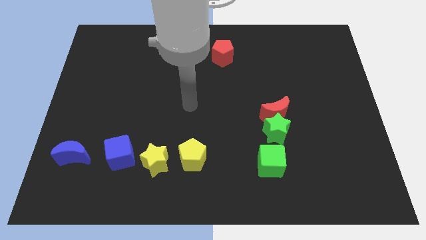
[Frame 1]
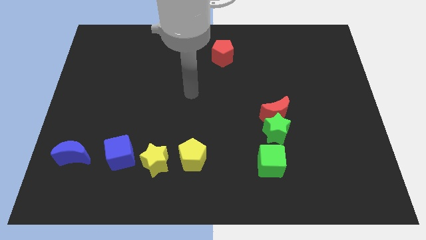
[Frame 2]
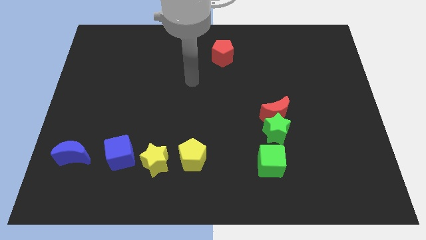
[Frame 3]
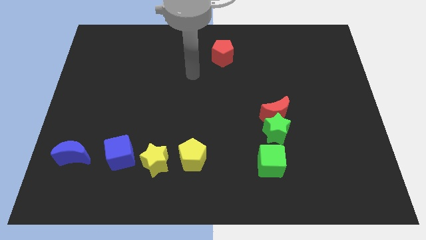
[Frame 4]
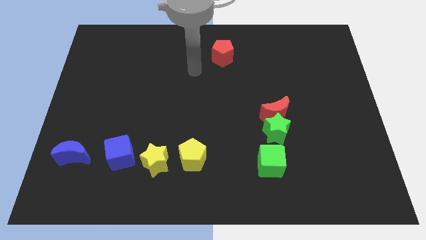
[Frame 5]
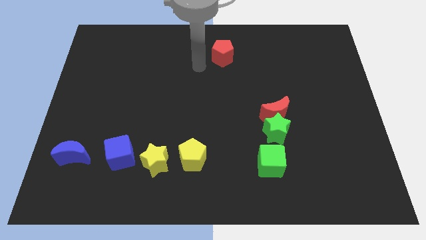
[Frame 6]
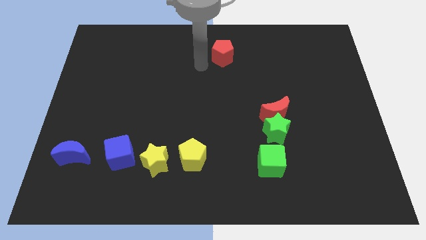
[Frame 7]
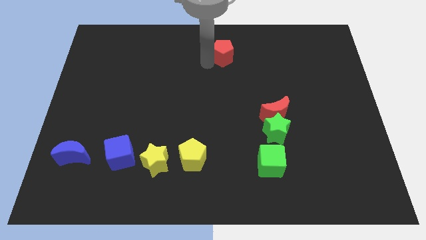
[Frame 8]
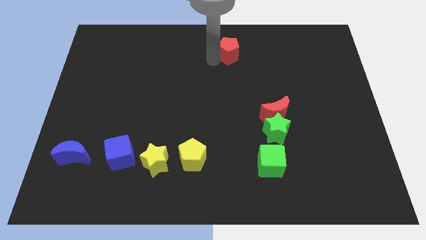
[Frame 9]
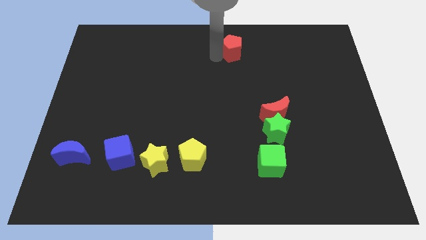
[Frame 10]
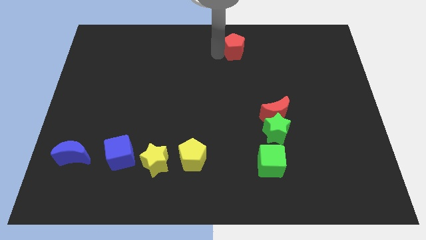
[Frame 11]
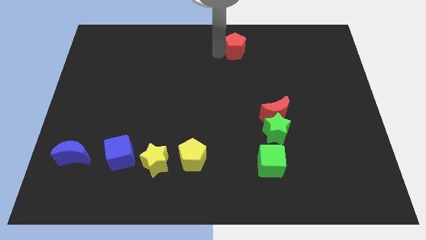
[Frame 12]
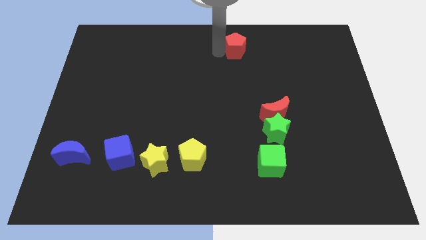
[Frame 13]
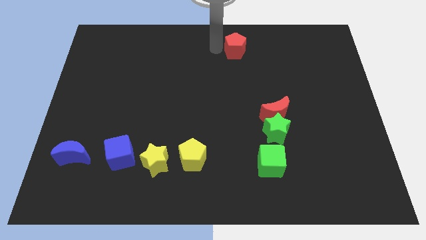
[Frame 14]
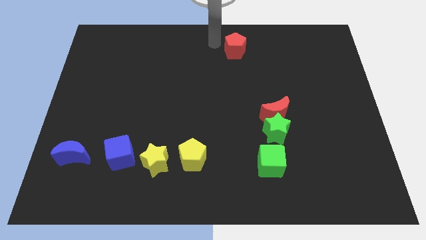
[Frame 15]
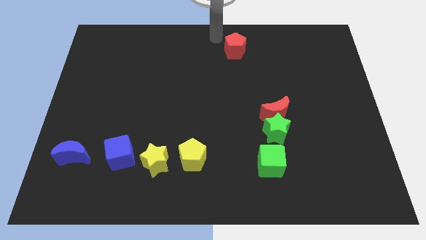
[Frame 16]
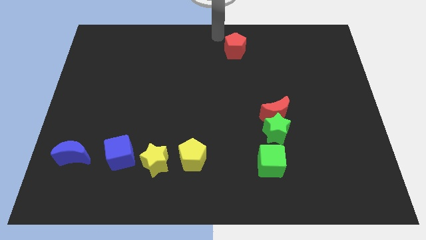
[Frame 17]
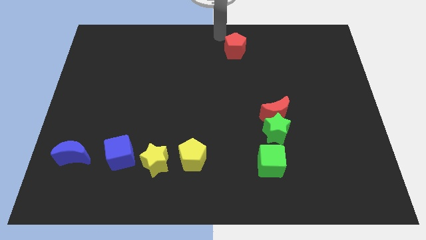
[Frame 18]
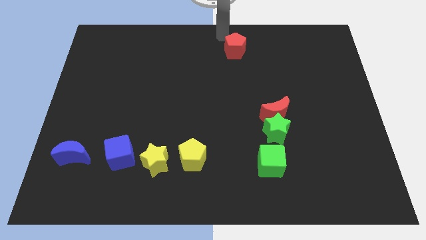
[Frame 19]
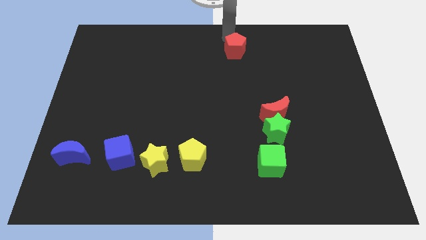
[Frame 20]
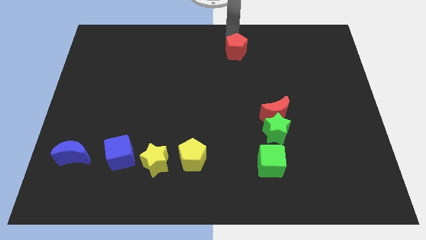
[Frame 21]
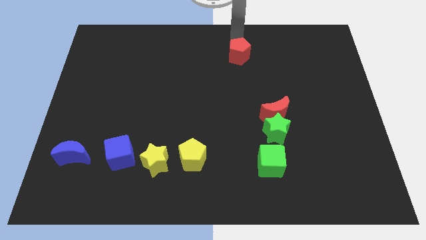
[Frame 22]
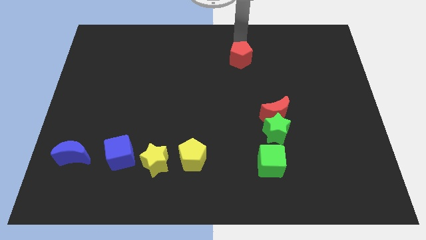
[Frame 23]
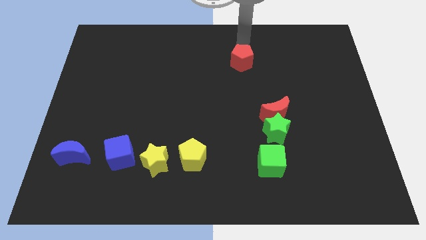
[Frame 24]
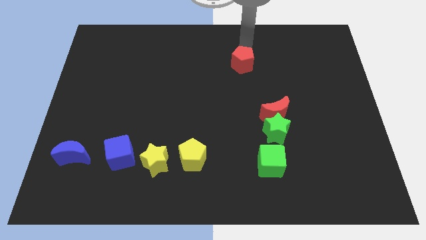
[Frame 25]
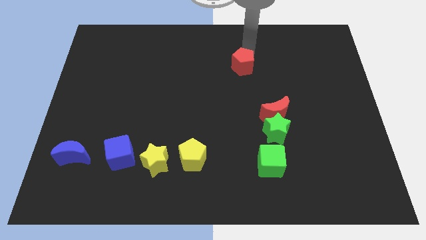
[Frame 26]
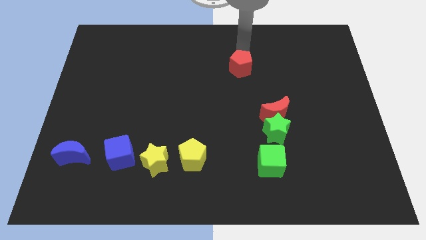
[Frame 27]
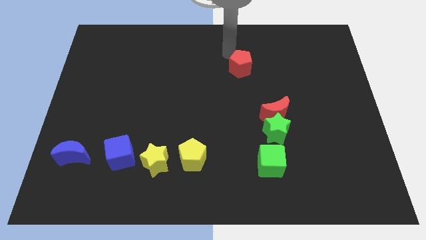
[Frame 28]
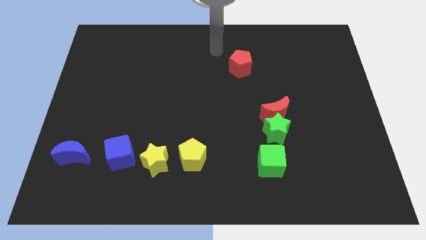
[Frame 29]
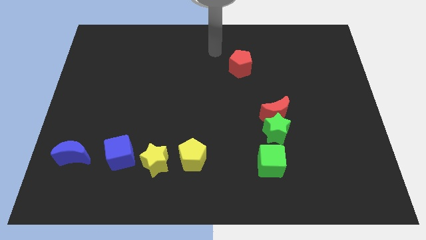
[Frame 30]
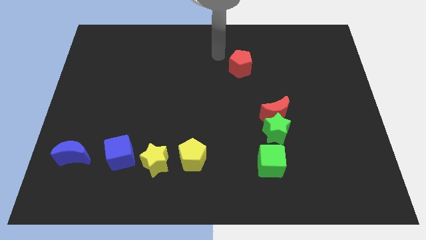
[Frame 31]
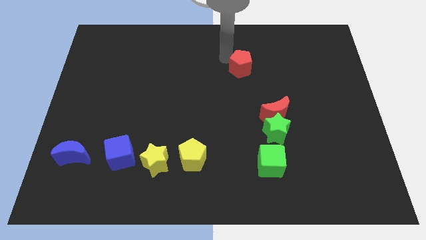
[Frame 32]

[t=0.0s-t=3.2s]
place the red pentagon diagonally top left to the red crescent

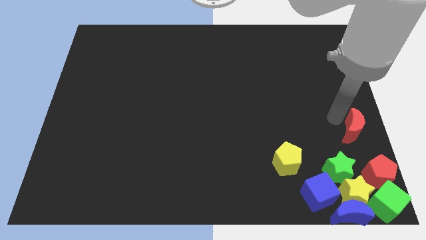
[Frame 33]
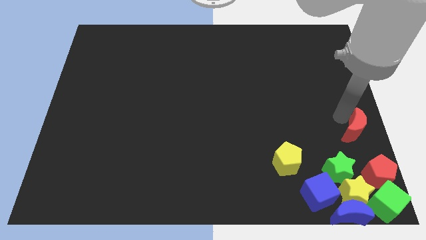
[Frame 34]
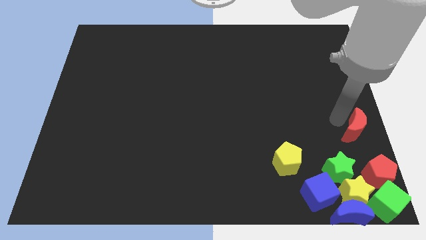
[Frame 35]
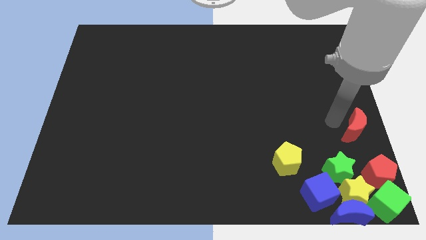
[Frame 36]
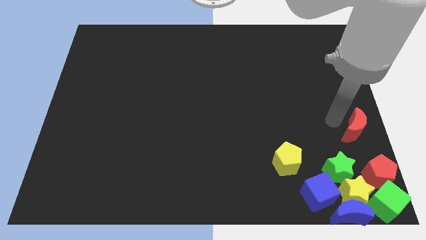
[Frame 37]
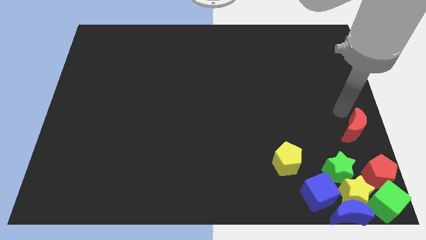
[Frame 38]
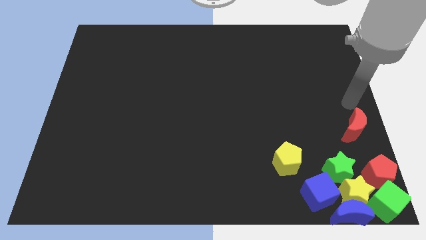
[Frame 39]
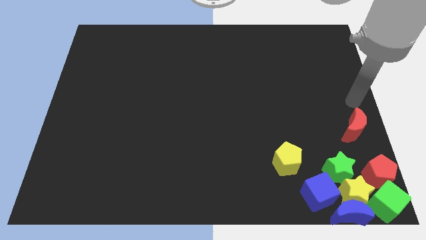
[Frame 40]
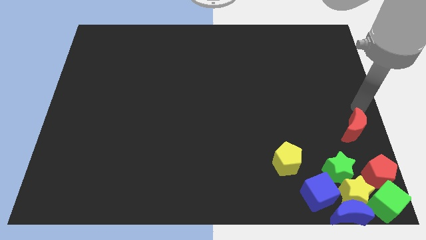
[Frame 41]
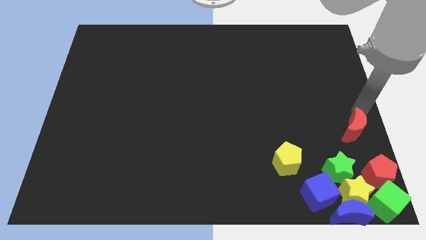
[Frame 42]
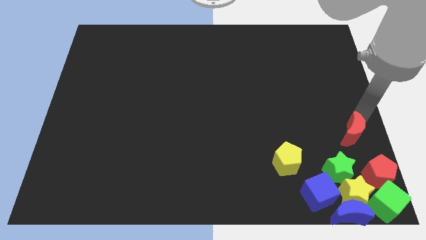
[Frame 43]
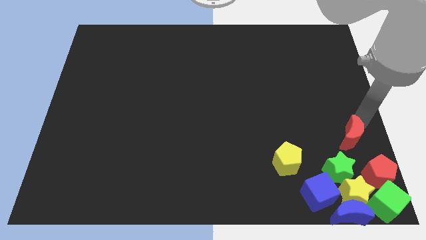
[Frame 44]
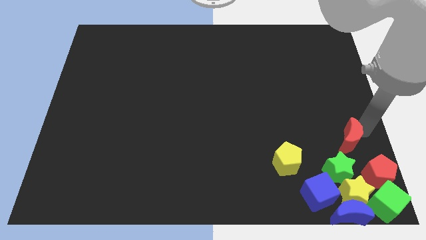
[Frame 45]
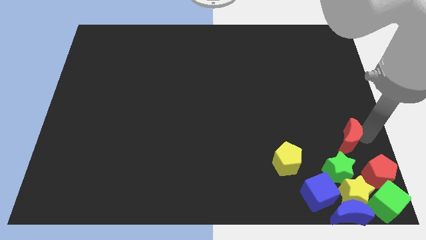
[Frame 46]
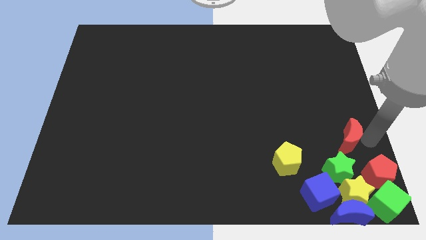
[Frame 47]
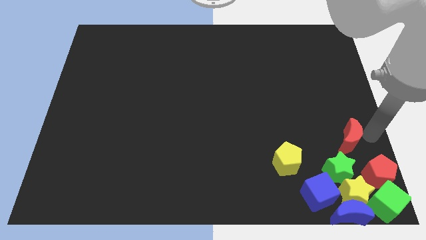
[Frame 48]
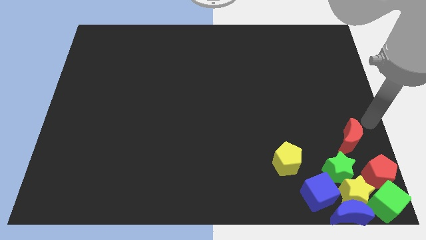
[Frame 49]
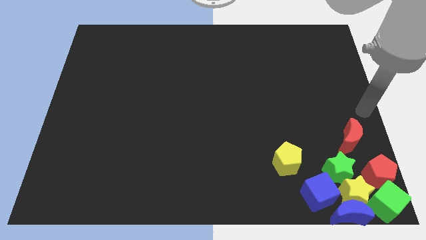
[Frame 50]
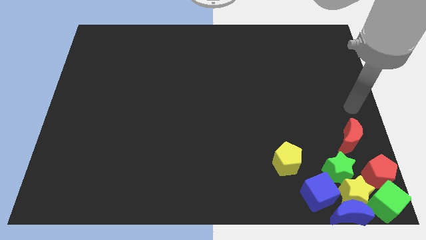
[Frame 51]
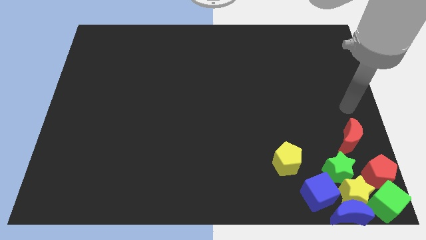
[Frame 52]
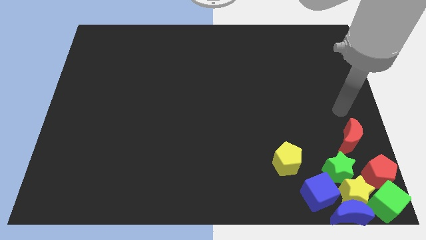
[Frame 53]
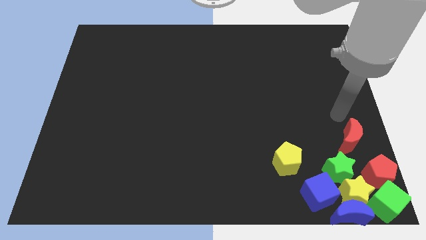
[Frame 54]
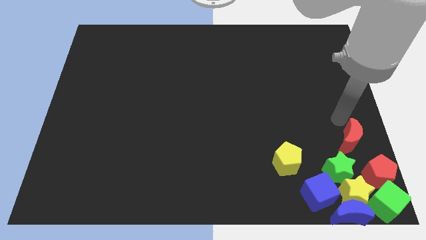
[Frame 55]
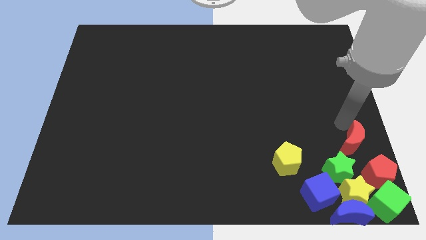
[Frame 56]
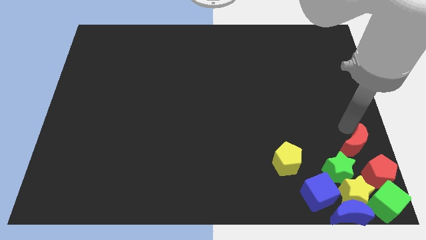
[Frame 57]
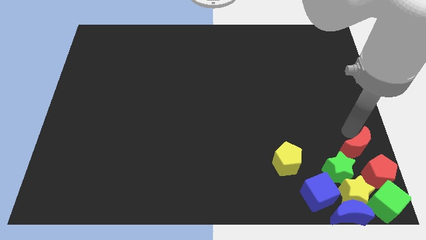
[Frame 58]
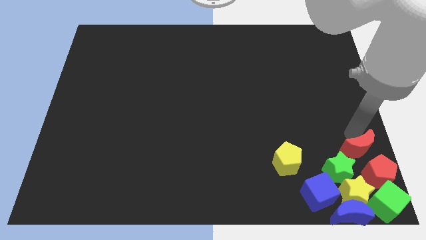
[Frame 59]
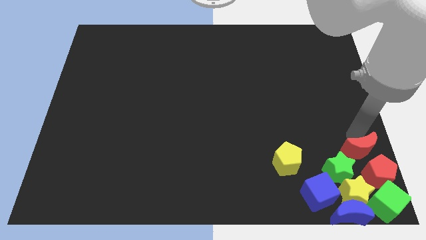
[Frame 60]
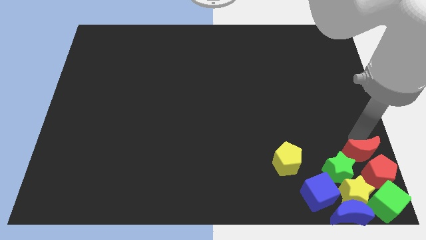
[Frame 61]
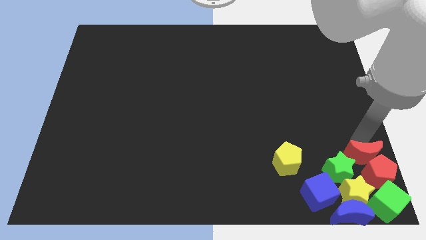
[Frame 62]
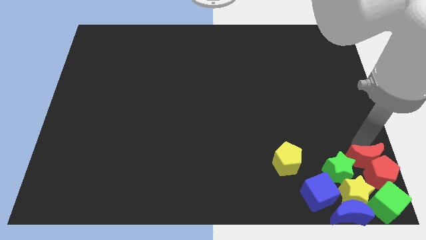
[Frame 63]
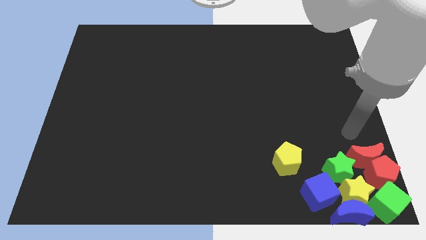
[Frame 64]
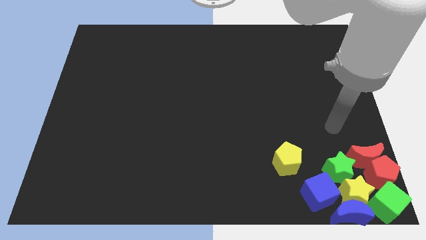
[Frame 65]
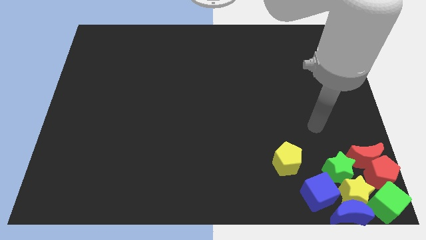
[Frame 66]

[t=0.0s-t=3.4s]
move the red crescent into the group of blocks

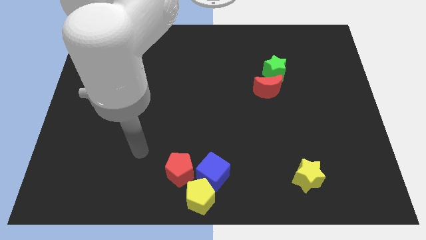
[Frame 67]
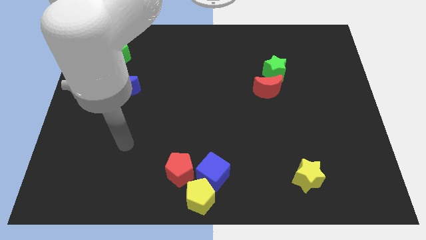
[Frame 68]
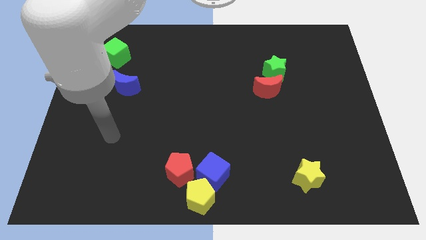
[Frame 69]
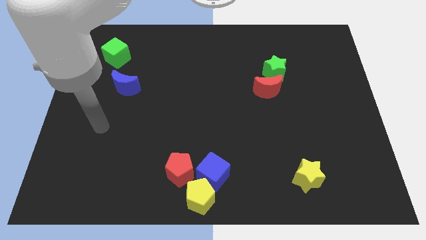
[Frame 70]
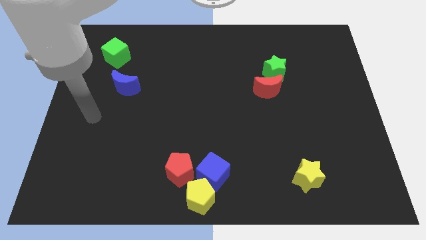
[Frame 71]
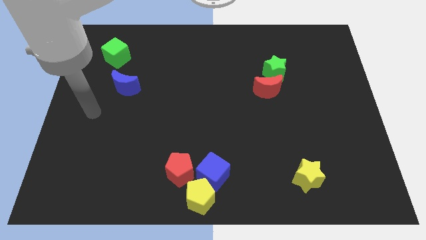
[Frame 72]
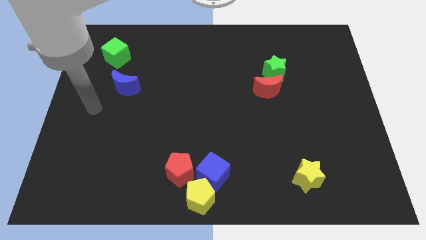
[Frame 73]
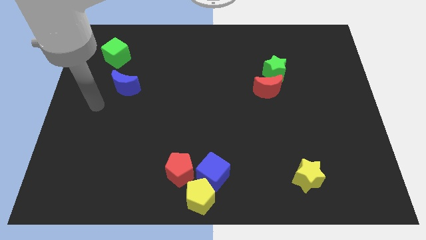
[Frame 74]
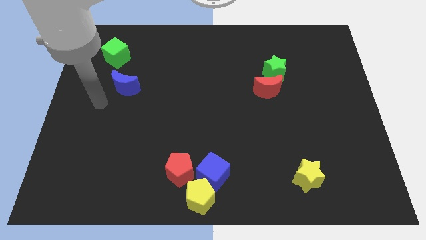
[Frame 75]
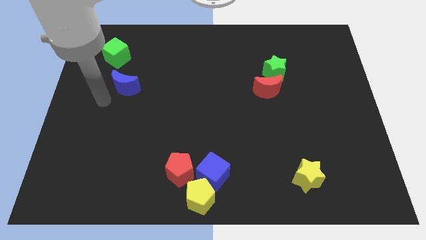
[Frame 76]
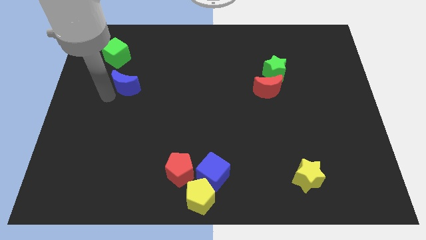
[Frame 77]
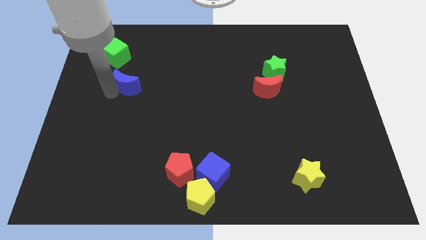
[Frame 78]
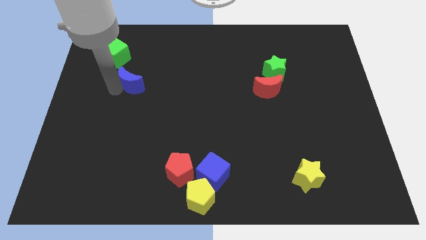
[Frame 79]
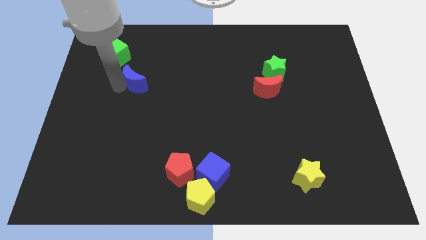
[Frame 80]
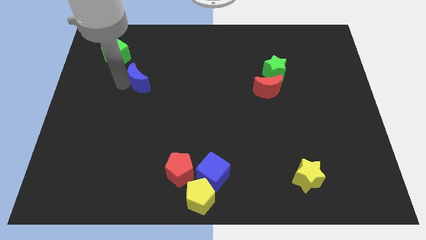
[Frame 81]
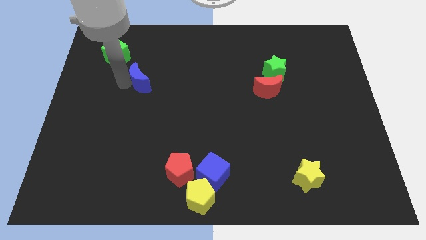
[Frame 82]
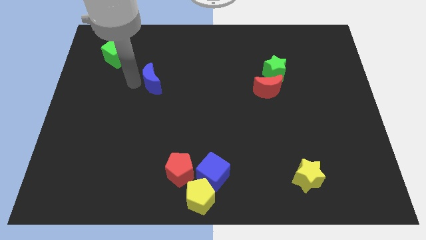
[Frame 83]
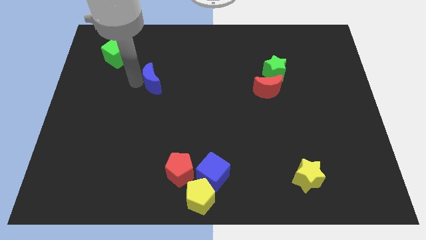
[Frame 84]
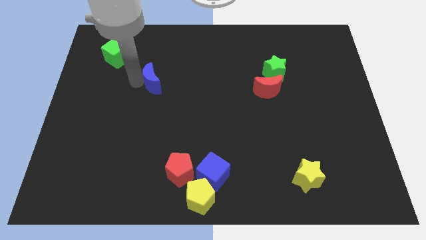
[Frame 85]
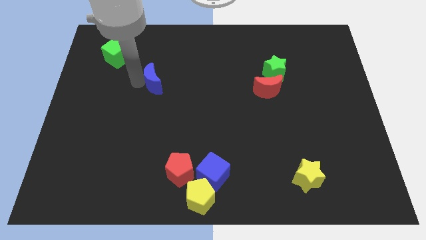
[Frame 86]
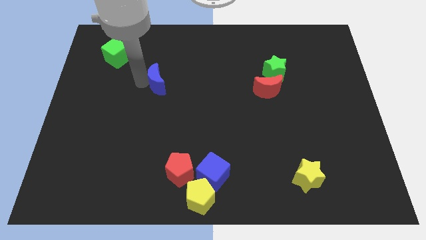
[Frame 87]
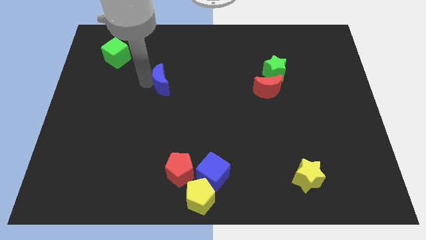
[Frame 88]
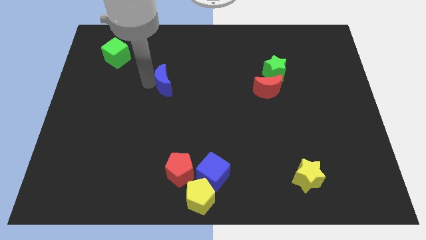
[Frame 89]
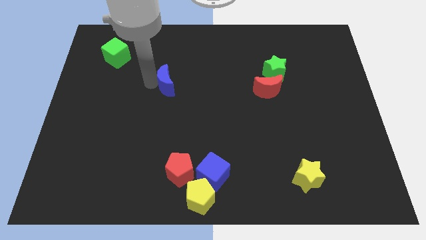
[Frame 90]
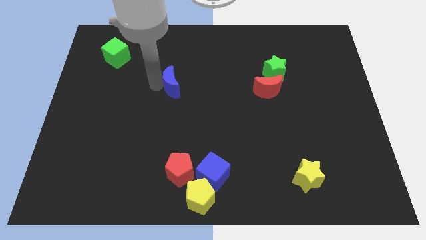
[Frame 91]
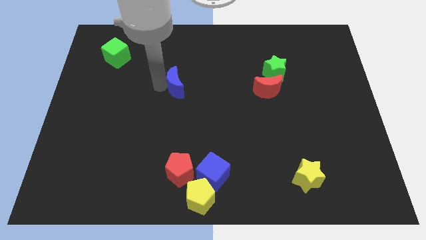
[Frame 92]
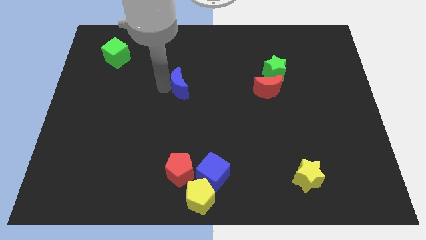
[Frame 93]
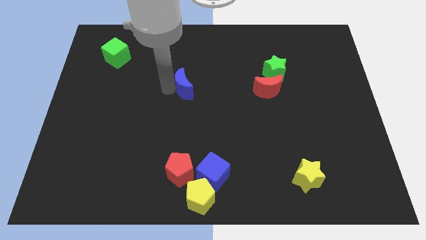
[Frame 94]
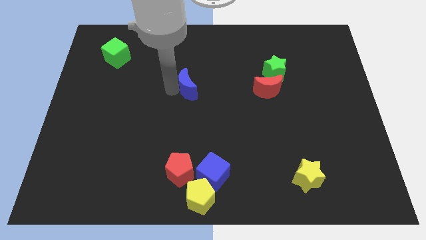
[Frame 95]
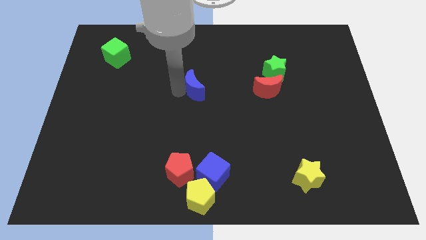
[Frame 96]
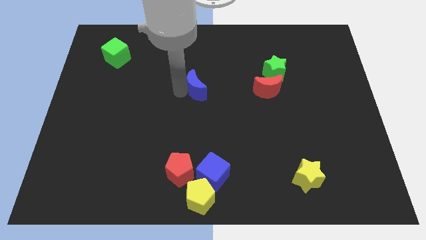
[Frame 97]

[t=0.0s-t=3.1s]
move the blue crescent slightly to the right
